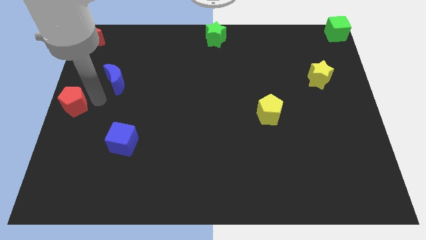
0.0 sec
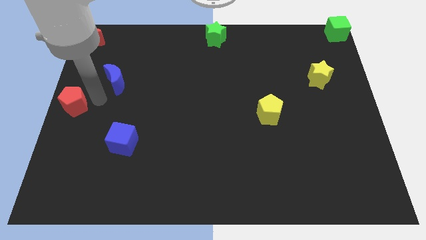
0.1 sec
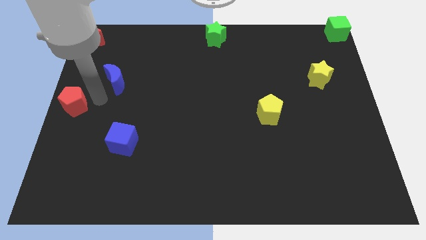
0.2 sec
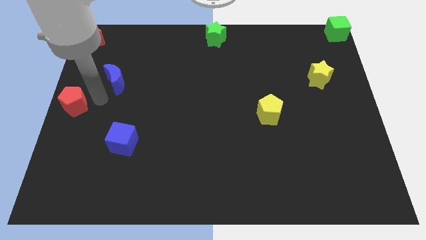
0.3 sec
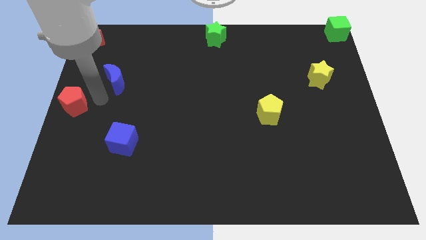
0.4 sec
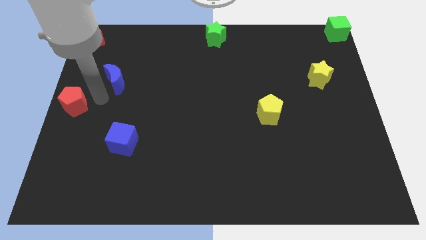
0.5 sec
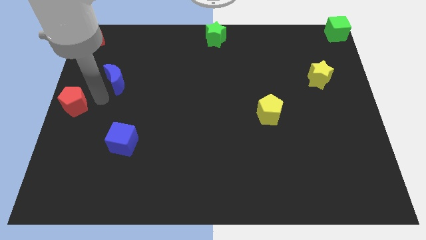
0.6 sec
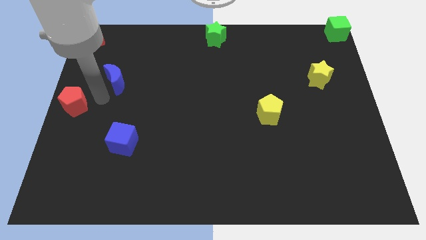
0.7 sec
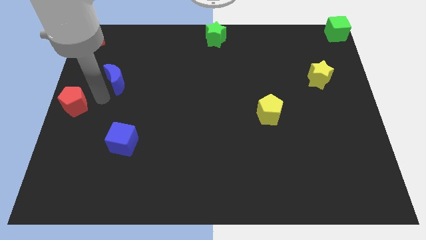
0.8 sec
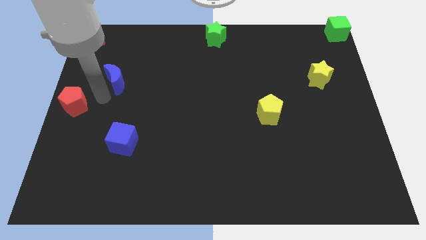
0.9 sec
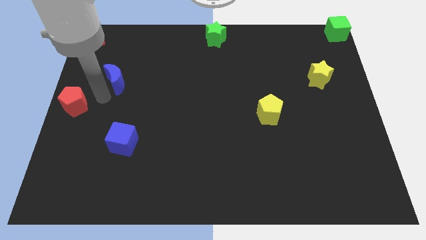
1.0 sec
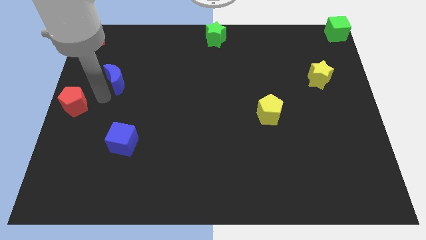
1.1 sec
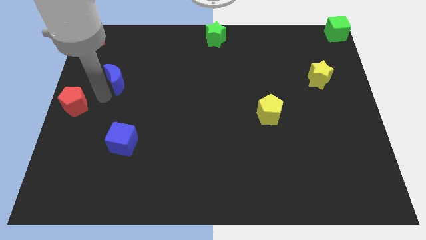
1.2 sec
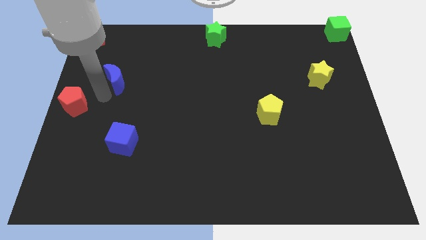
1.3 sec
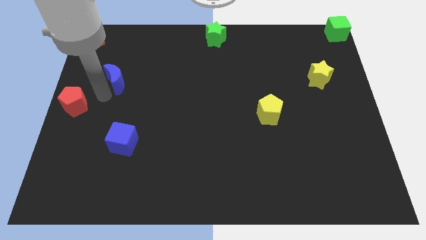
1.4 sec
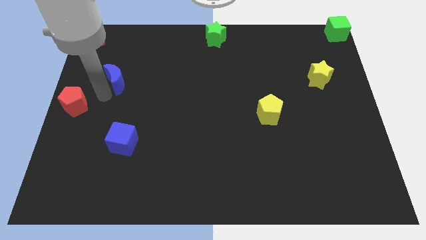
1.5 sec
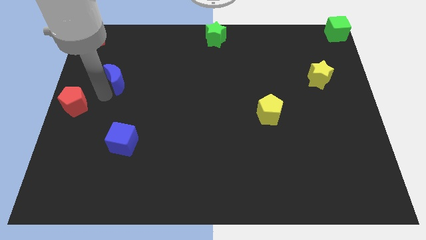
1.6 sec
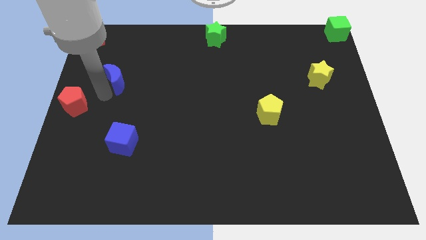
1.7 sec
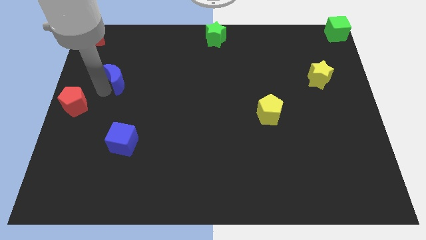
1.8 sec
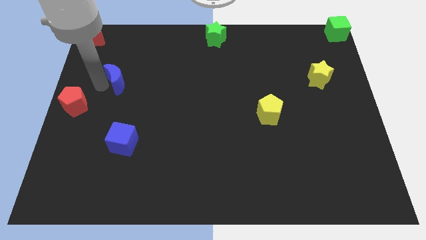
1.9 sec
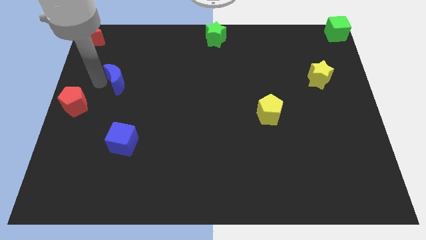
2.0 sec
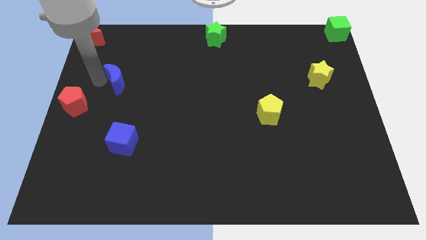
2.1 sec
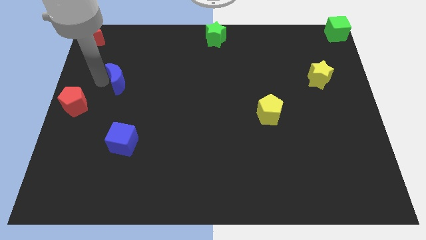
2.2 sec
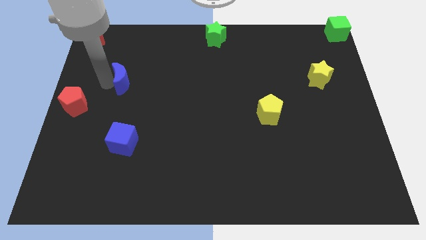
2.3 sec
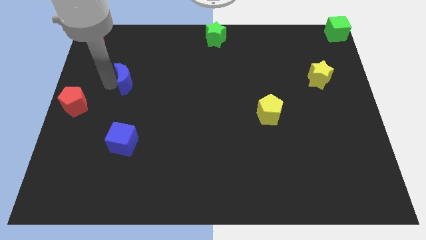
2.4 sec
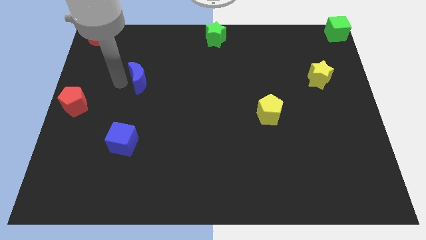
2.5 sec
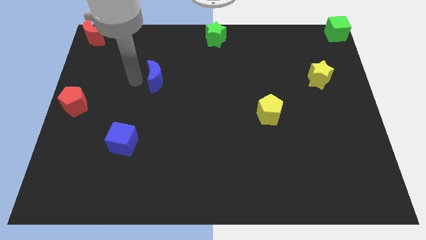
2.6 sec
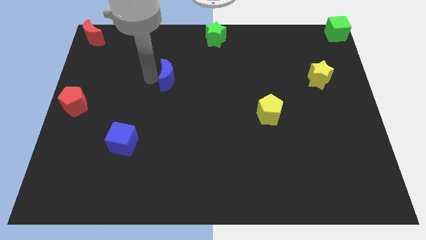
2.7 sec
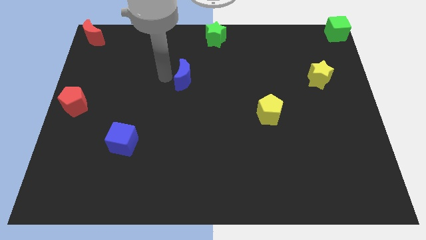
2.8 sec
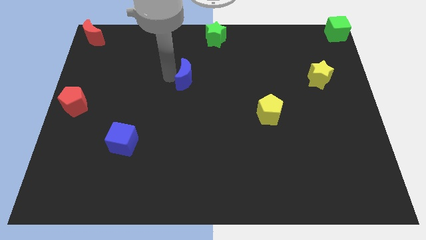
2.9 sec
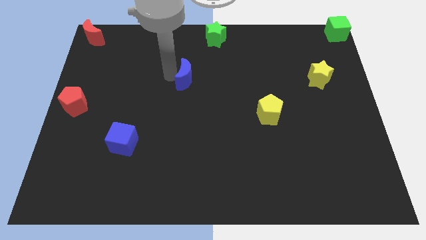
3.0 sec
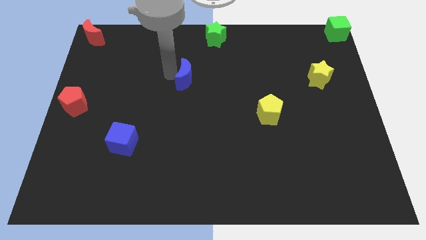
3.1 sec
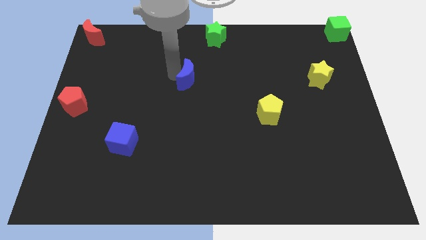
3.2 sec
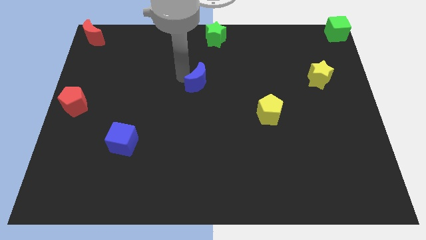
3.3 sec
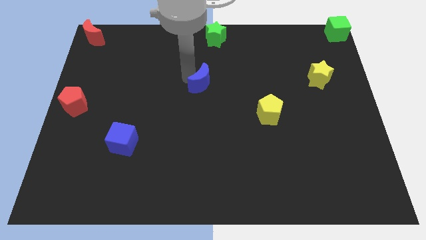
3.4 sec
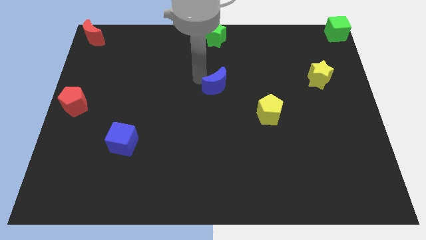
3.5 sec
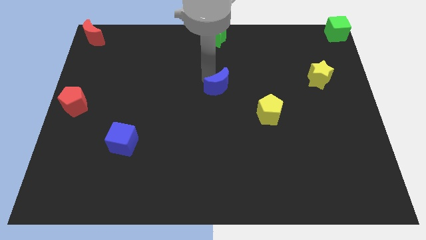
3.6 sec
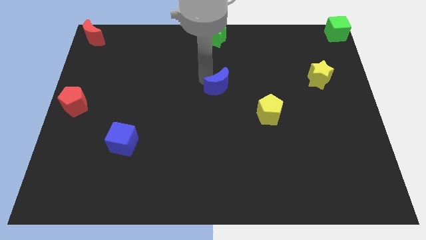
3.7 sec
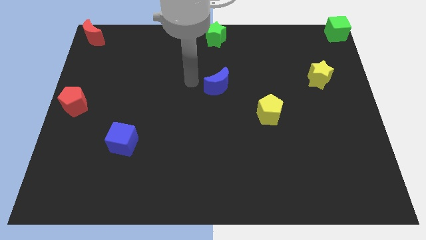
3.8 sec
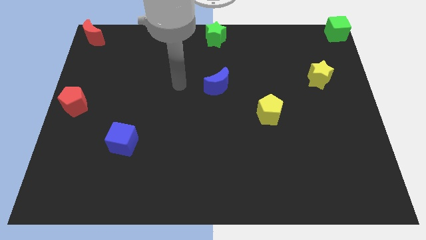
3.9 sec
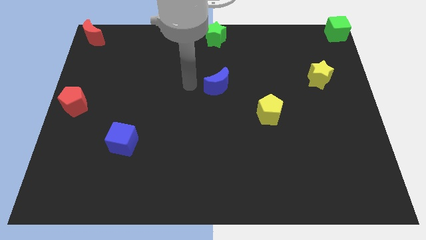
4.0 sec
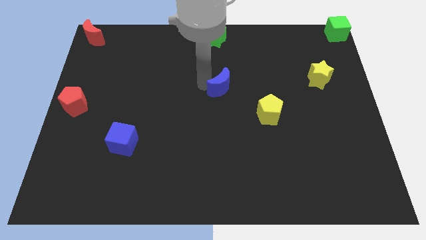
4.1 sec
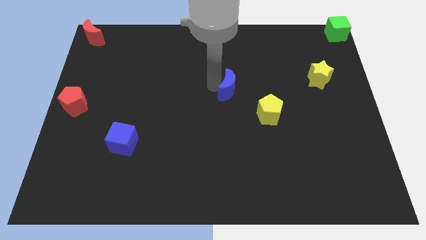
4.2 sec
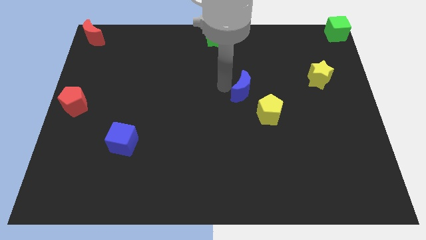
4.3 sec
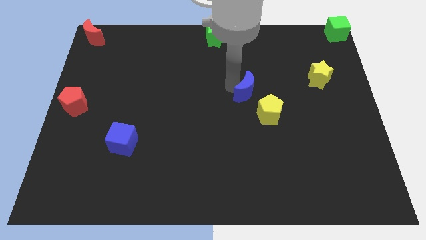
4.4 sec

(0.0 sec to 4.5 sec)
push the blue crescent to the right of the board

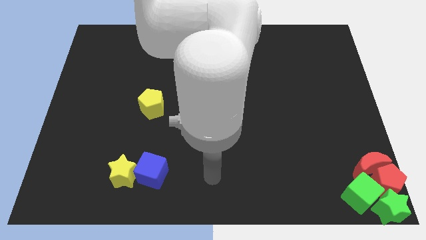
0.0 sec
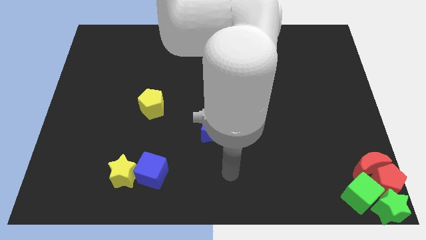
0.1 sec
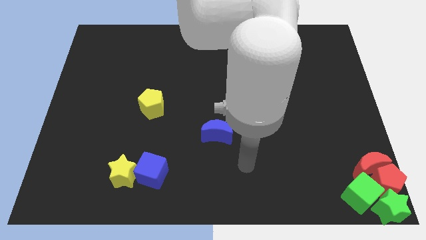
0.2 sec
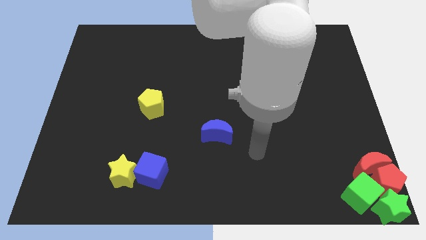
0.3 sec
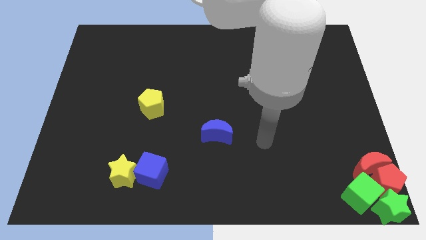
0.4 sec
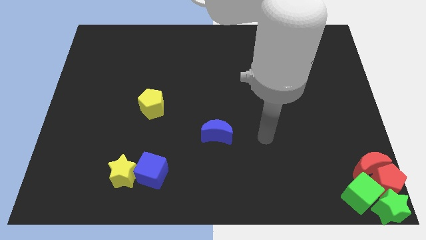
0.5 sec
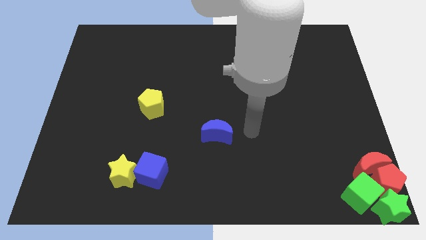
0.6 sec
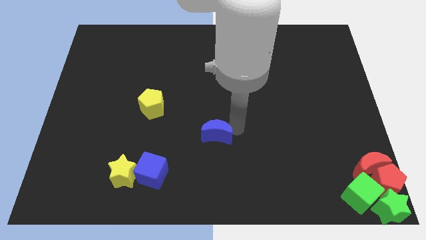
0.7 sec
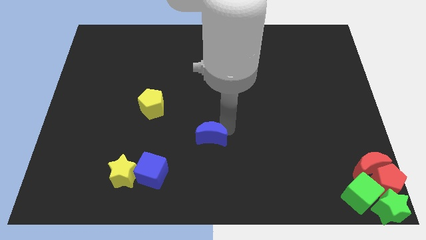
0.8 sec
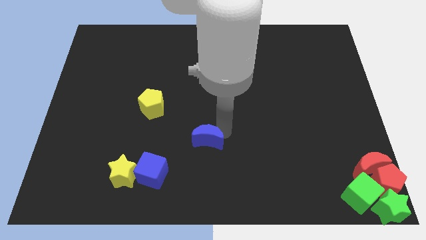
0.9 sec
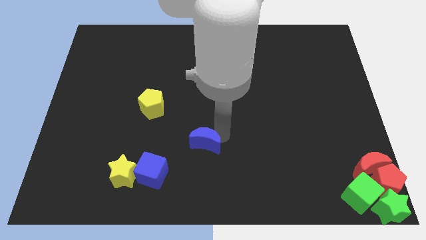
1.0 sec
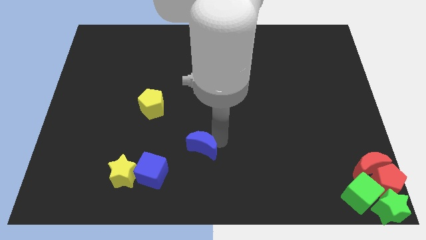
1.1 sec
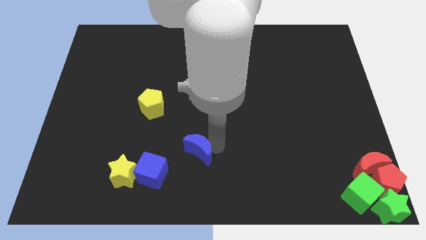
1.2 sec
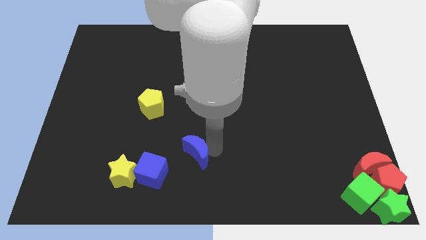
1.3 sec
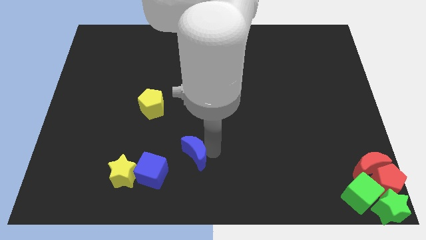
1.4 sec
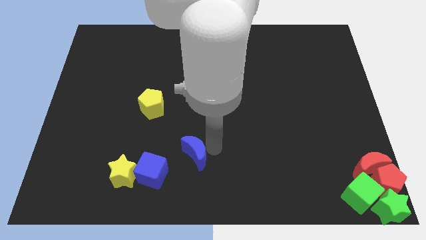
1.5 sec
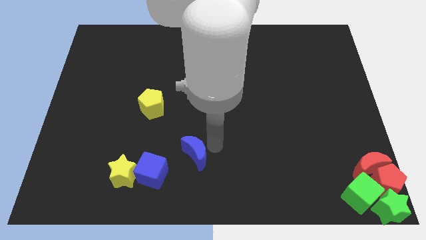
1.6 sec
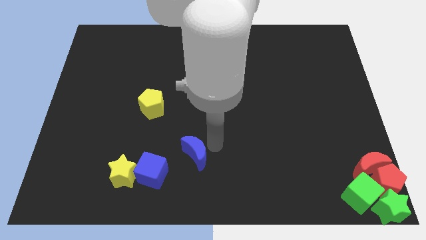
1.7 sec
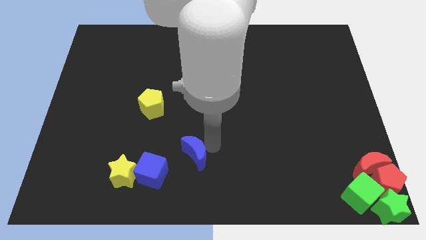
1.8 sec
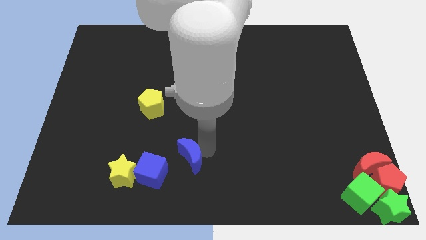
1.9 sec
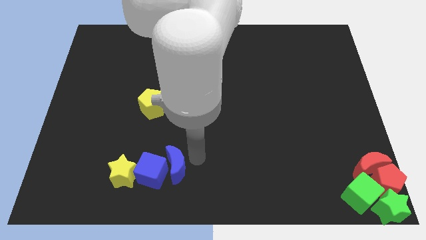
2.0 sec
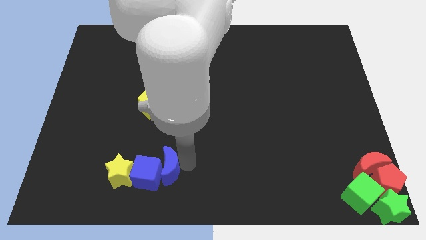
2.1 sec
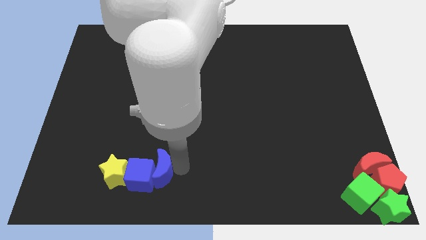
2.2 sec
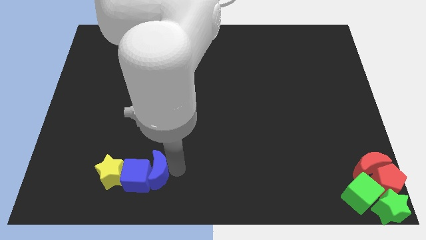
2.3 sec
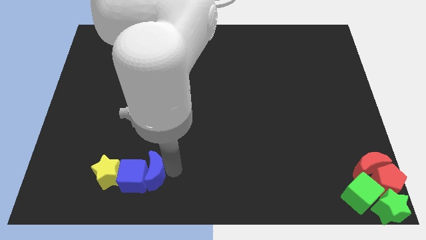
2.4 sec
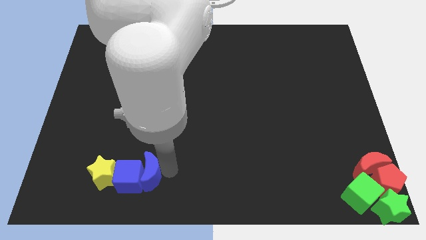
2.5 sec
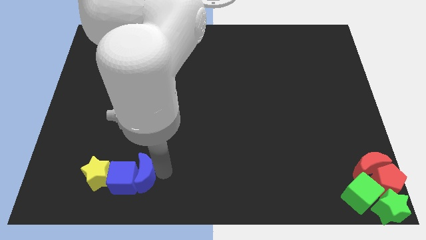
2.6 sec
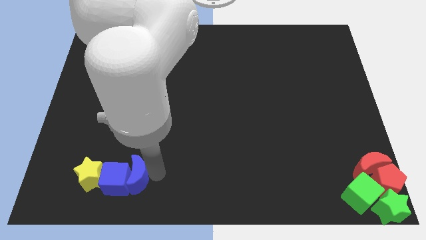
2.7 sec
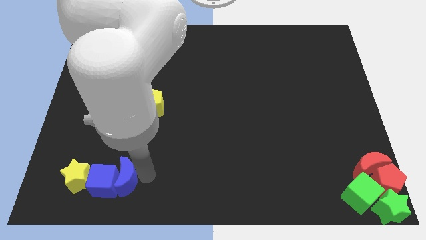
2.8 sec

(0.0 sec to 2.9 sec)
push the blue crescent into the blue cube

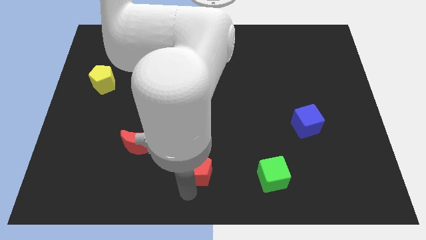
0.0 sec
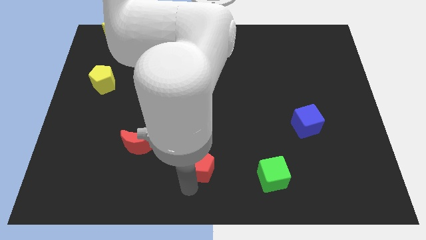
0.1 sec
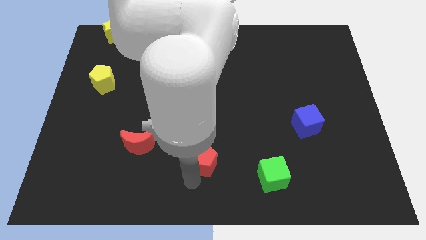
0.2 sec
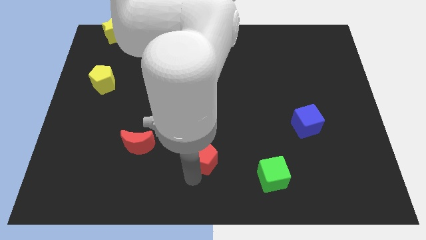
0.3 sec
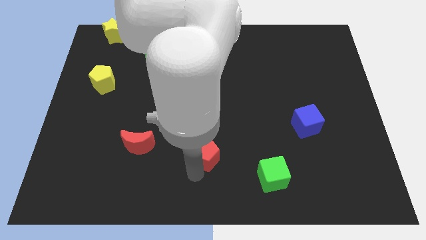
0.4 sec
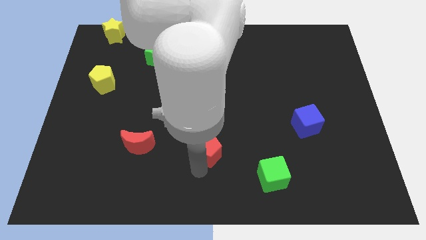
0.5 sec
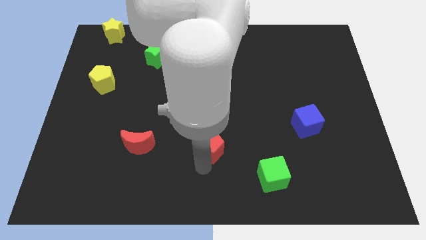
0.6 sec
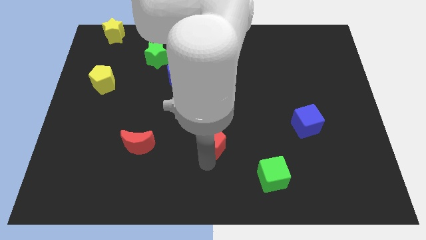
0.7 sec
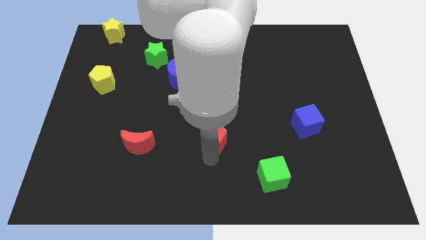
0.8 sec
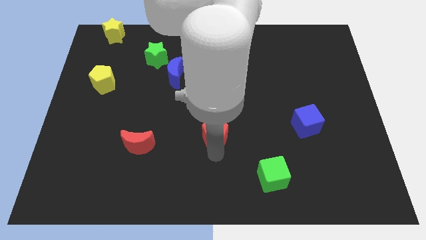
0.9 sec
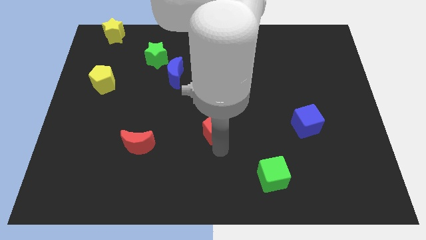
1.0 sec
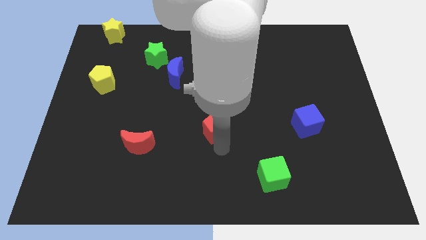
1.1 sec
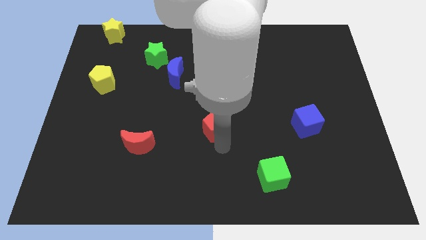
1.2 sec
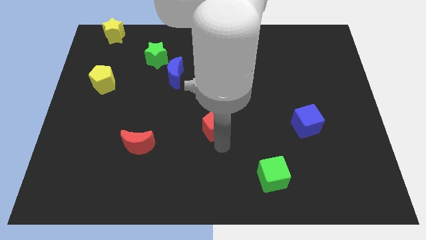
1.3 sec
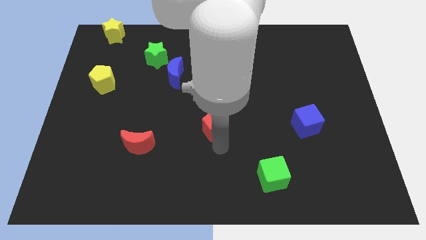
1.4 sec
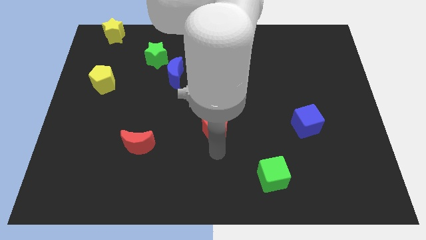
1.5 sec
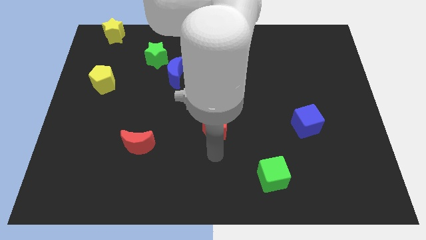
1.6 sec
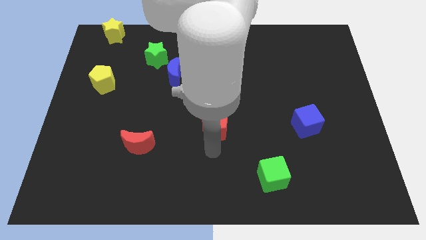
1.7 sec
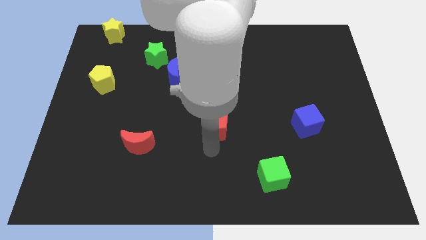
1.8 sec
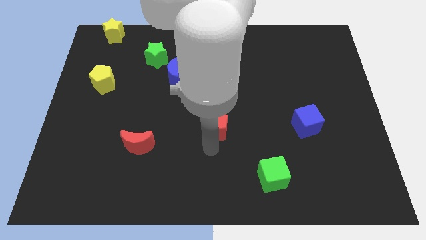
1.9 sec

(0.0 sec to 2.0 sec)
push the red pentagon slightly upwards
